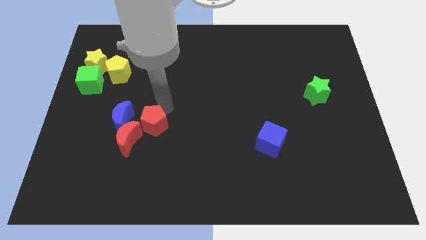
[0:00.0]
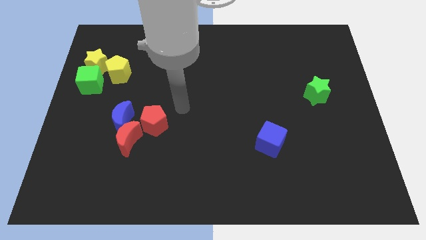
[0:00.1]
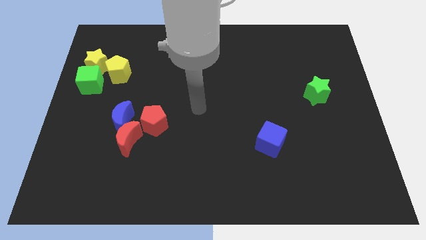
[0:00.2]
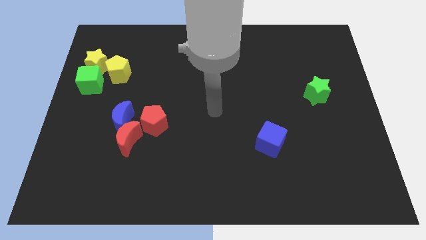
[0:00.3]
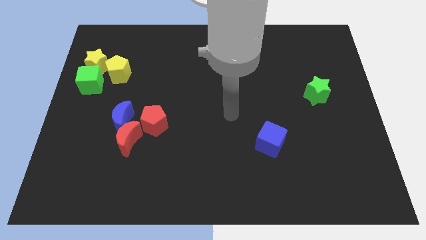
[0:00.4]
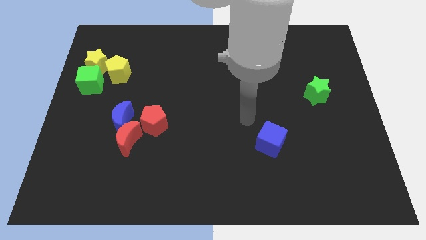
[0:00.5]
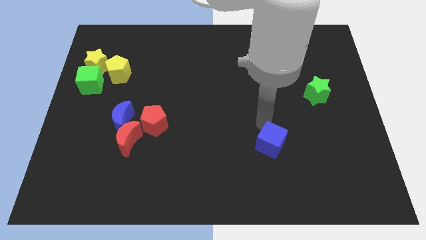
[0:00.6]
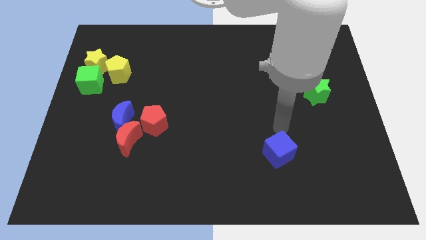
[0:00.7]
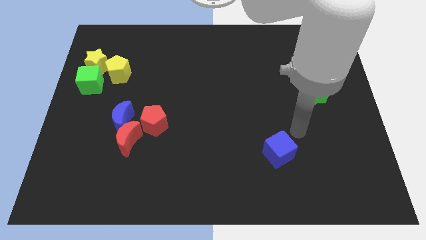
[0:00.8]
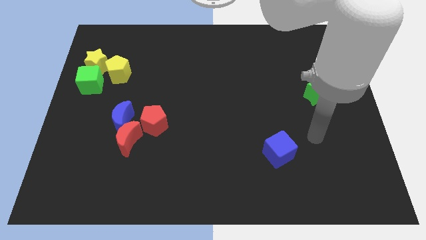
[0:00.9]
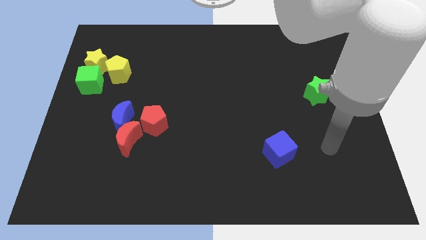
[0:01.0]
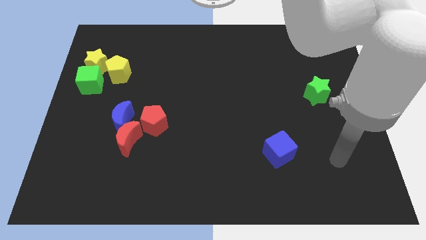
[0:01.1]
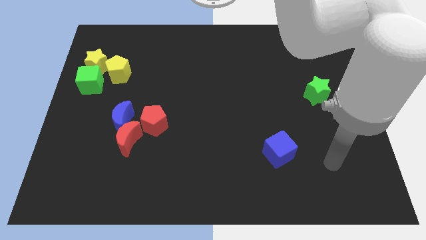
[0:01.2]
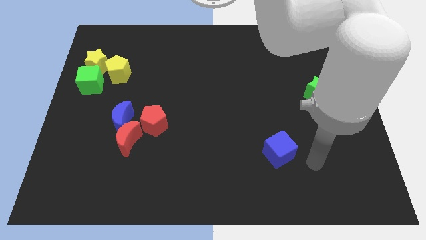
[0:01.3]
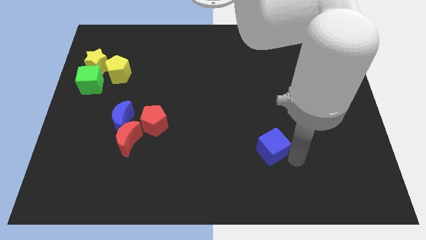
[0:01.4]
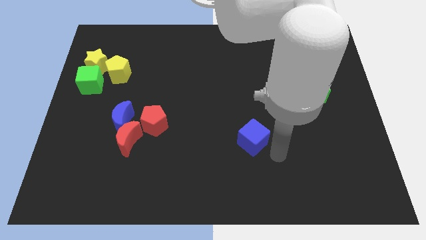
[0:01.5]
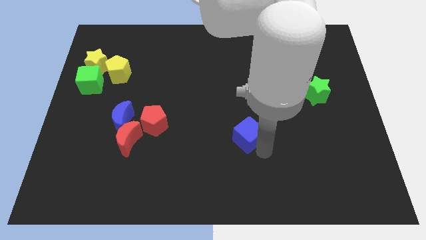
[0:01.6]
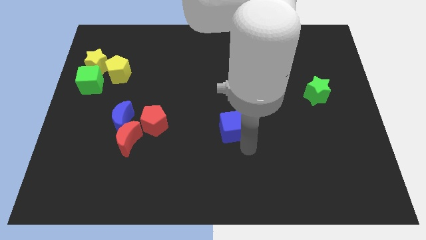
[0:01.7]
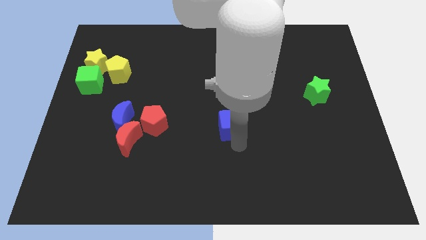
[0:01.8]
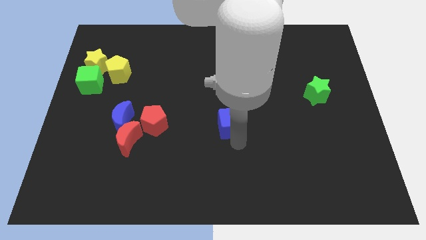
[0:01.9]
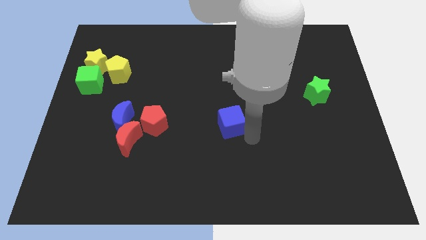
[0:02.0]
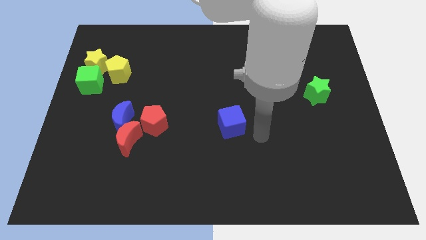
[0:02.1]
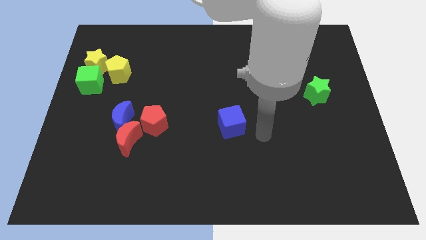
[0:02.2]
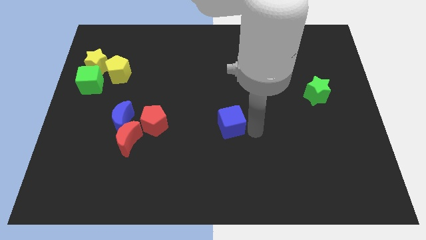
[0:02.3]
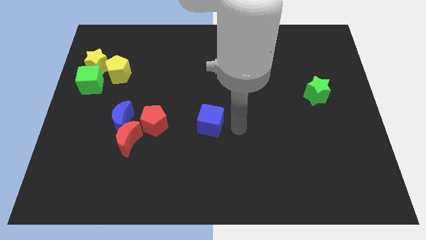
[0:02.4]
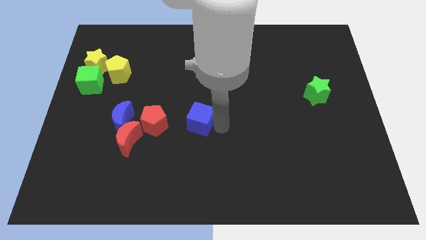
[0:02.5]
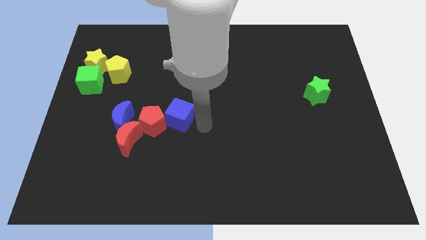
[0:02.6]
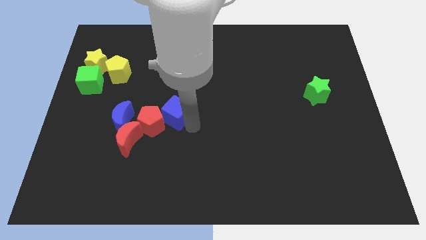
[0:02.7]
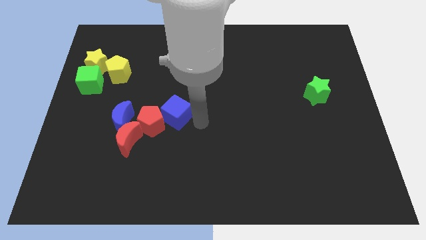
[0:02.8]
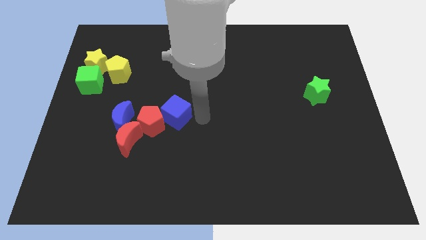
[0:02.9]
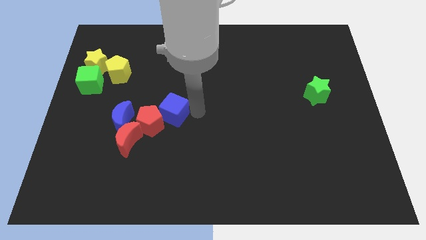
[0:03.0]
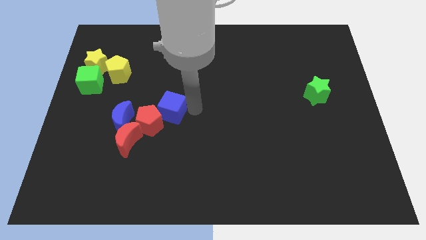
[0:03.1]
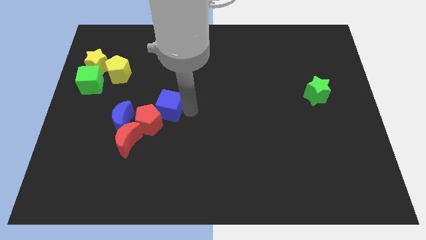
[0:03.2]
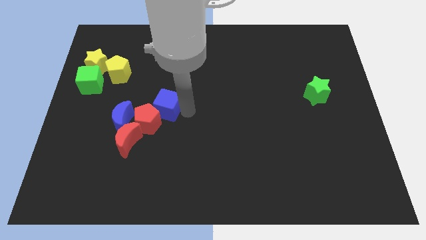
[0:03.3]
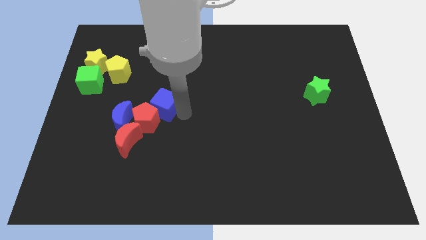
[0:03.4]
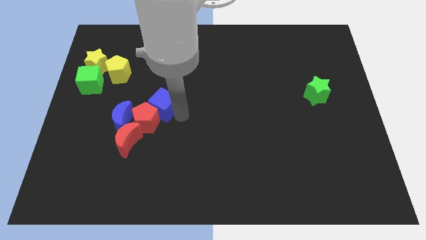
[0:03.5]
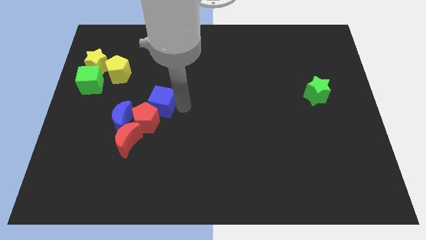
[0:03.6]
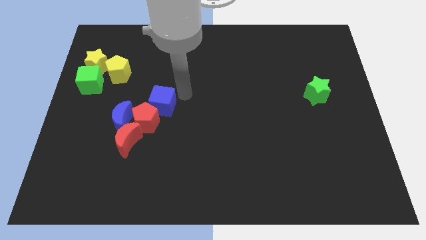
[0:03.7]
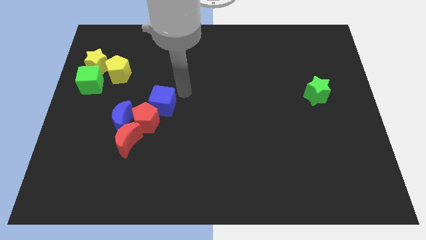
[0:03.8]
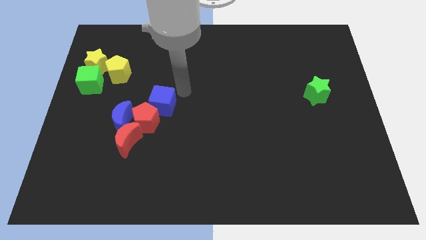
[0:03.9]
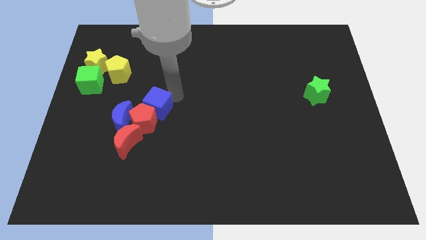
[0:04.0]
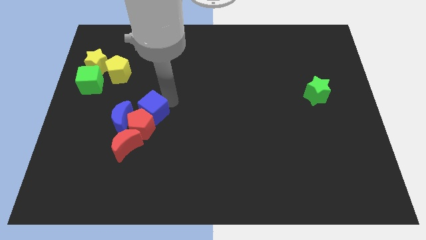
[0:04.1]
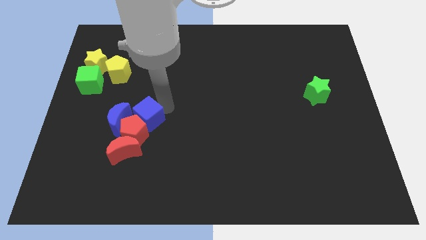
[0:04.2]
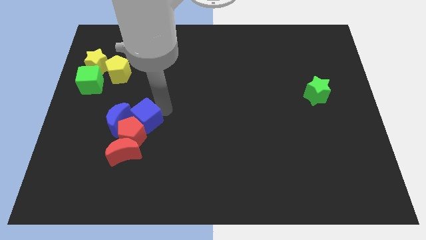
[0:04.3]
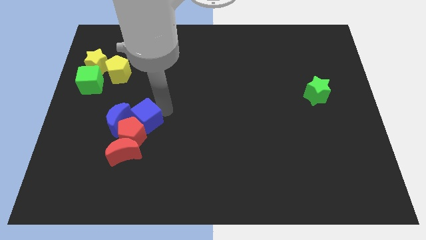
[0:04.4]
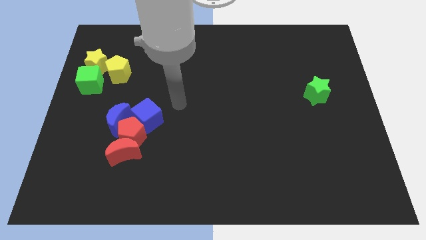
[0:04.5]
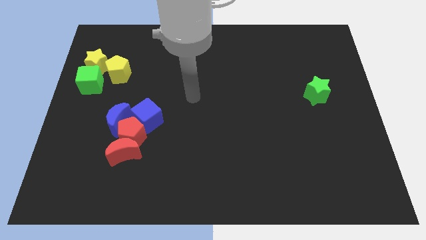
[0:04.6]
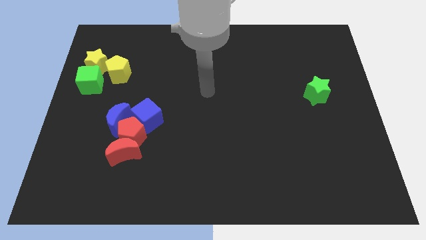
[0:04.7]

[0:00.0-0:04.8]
move the blue cube to the right of the blue crescent

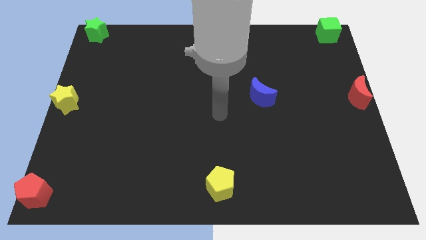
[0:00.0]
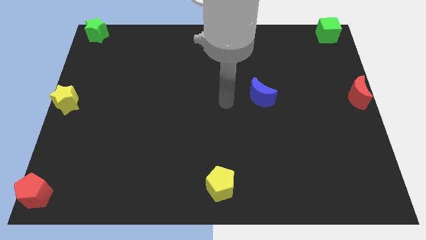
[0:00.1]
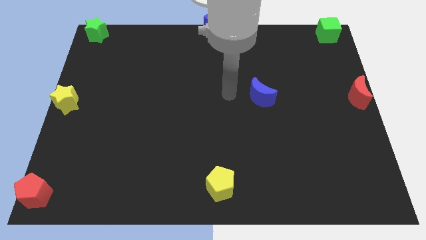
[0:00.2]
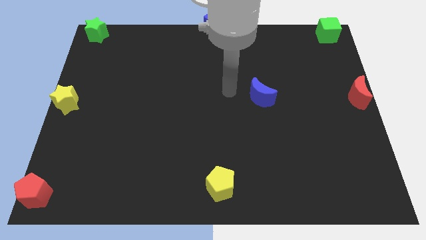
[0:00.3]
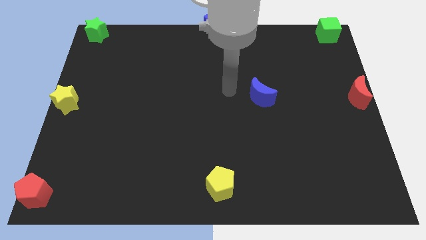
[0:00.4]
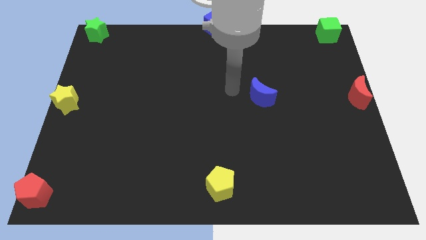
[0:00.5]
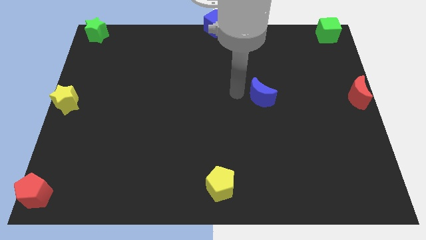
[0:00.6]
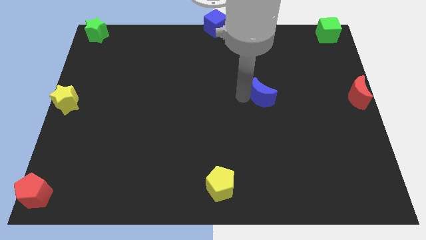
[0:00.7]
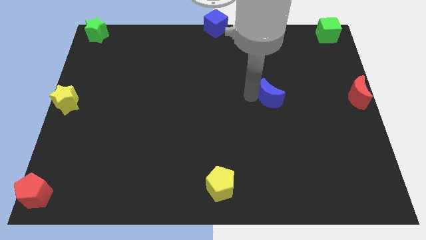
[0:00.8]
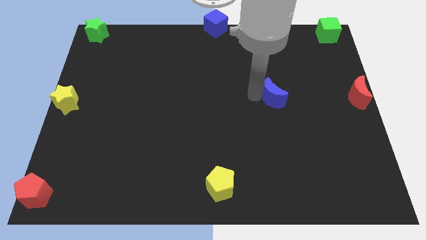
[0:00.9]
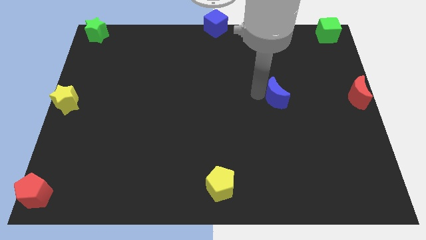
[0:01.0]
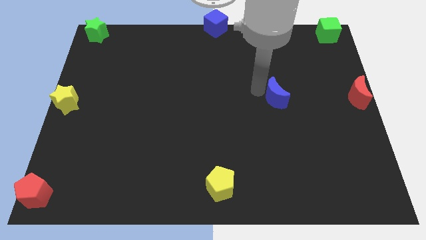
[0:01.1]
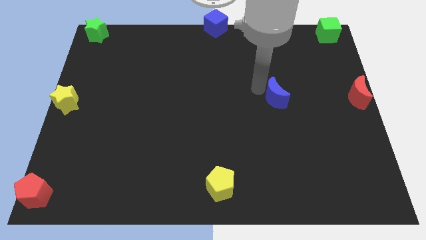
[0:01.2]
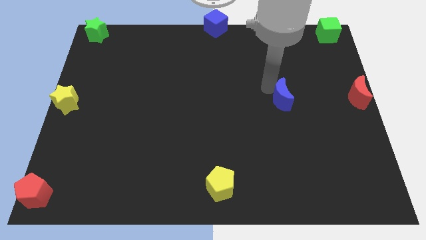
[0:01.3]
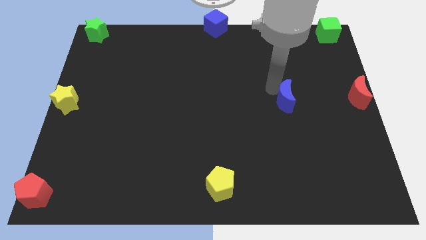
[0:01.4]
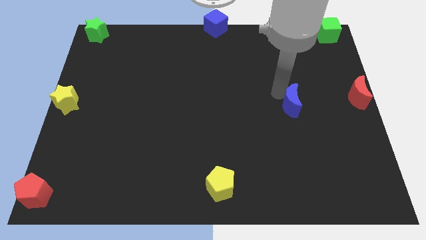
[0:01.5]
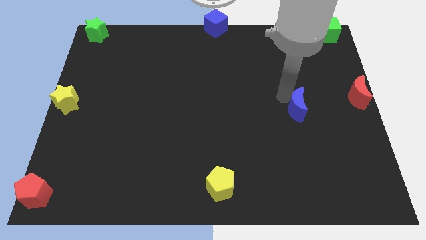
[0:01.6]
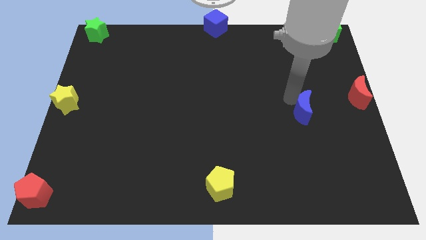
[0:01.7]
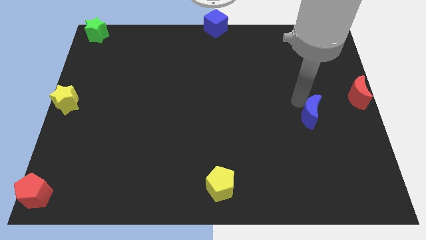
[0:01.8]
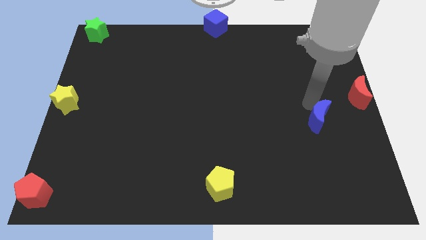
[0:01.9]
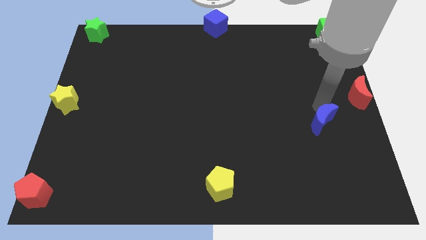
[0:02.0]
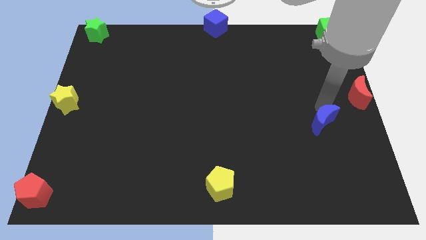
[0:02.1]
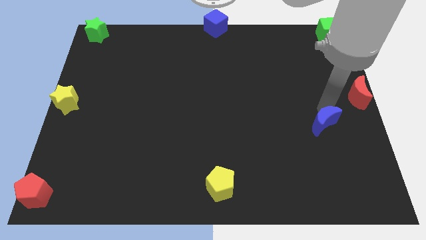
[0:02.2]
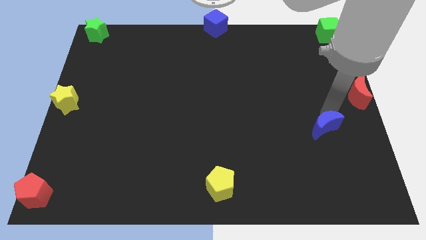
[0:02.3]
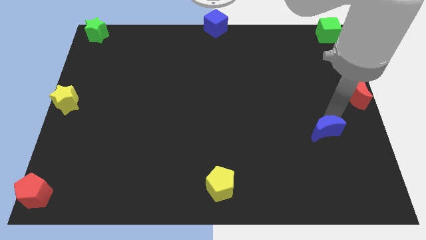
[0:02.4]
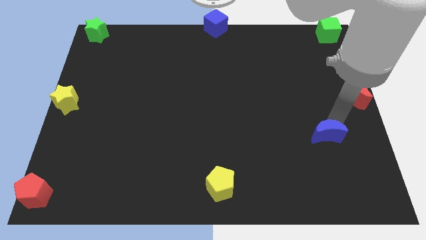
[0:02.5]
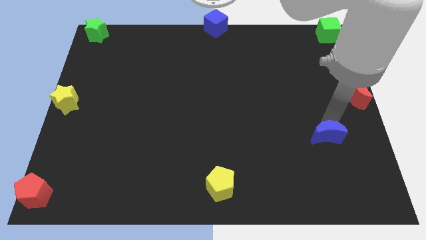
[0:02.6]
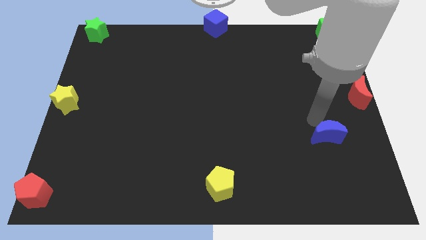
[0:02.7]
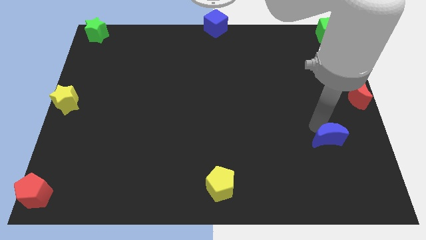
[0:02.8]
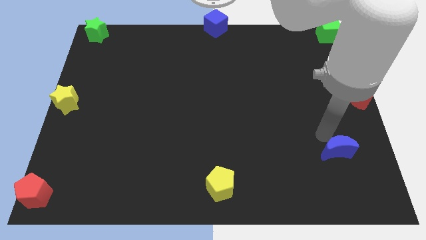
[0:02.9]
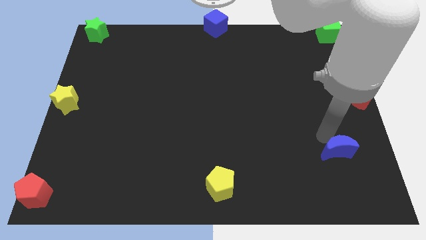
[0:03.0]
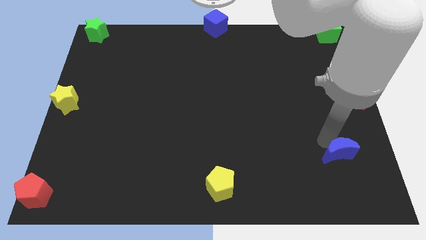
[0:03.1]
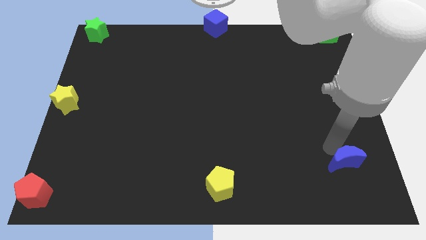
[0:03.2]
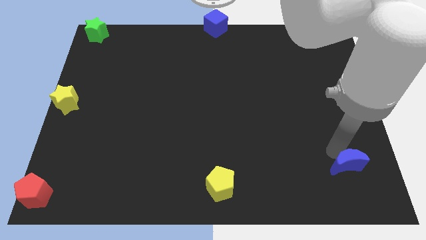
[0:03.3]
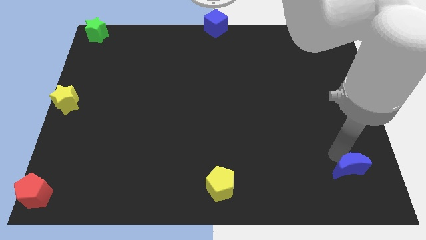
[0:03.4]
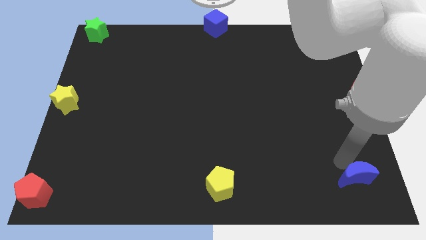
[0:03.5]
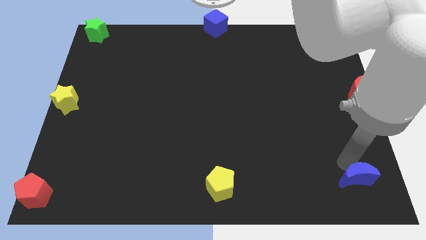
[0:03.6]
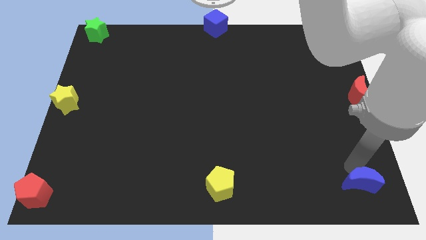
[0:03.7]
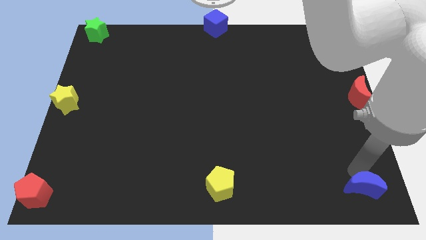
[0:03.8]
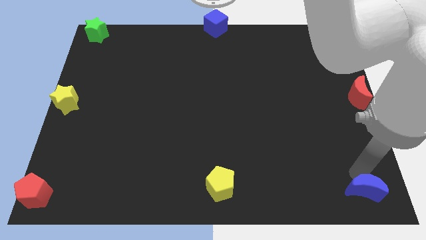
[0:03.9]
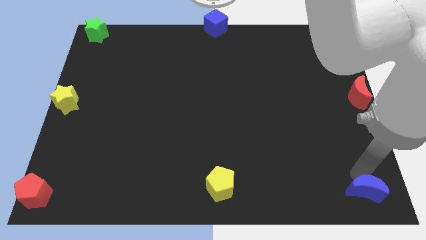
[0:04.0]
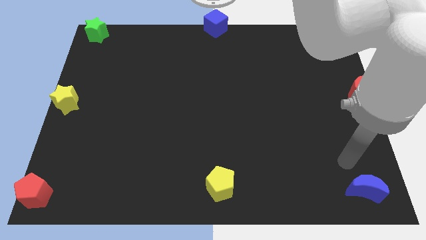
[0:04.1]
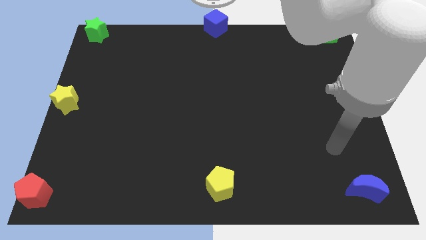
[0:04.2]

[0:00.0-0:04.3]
move the blue moon to the bottom right side of the board
